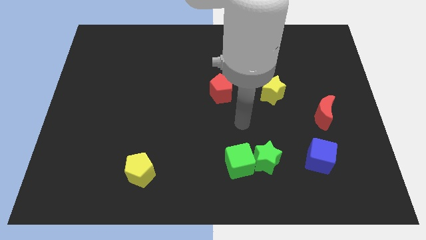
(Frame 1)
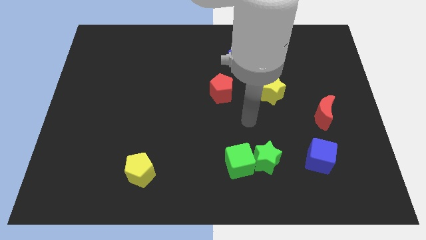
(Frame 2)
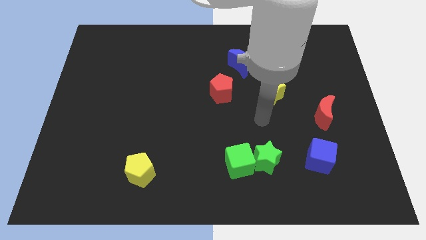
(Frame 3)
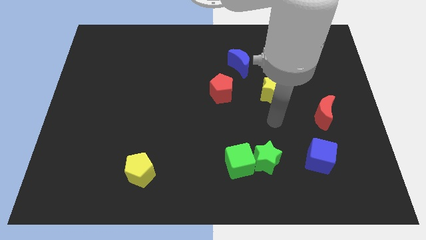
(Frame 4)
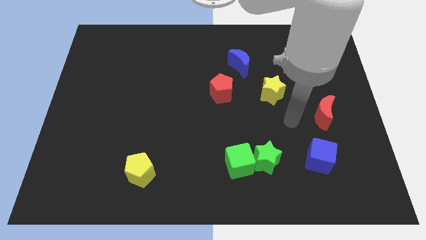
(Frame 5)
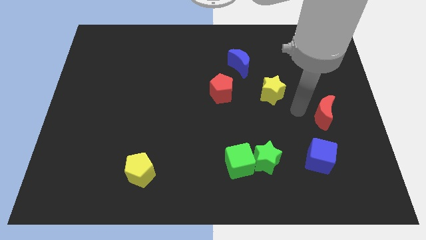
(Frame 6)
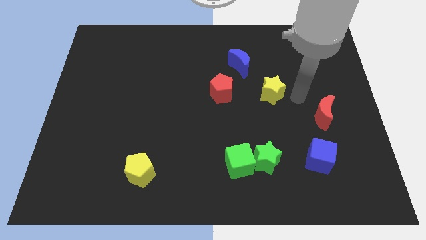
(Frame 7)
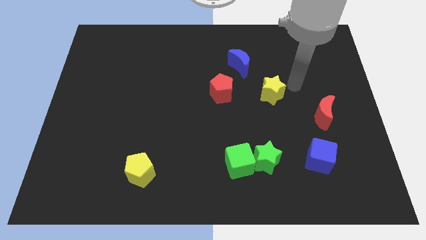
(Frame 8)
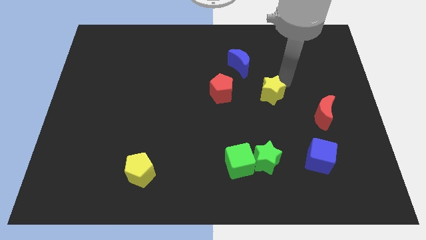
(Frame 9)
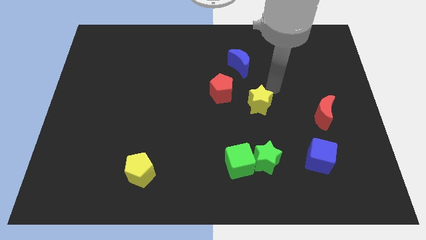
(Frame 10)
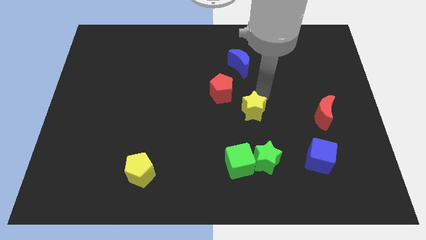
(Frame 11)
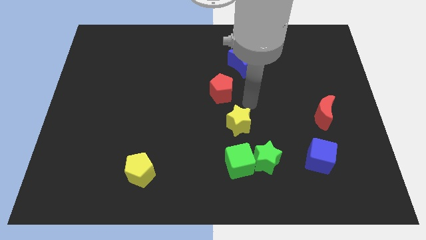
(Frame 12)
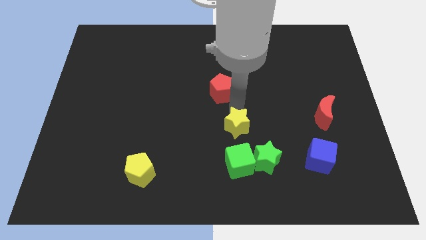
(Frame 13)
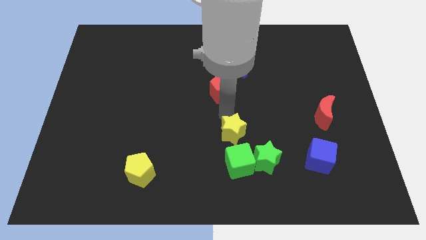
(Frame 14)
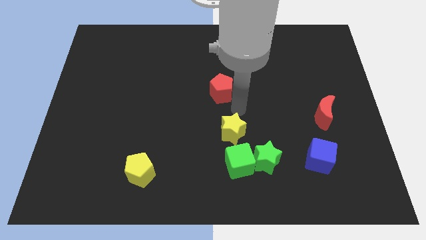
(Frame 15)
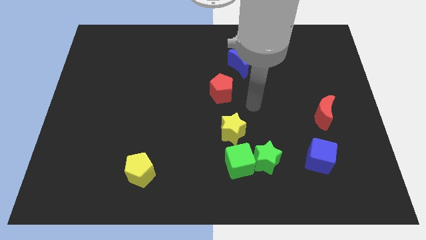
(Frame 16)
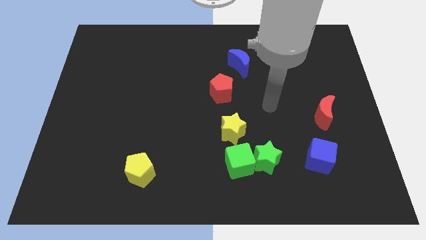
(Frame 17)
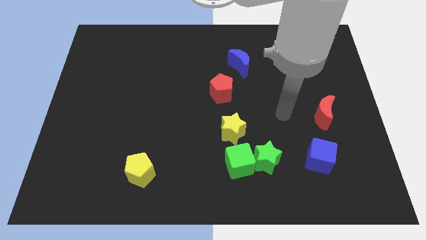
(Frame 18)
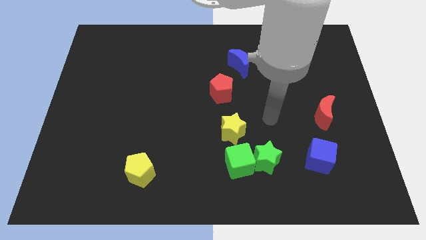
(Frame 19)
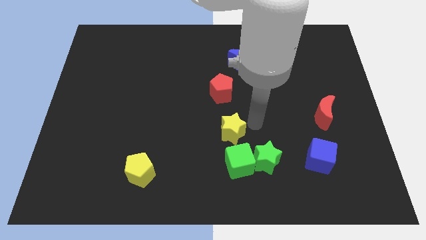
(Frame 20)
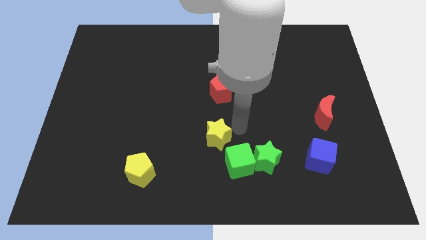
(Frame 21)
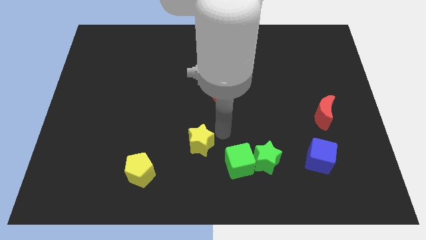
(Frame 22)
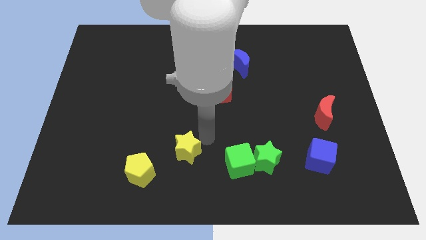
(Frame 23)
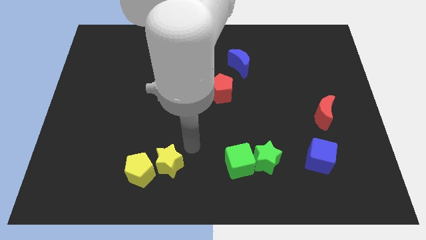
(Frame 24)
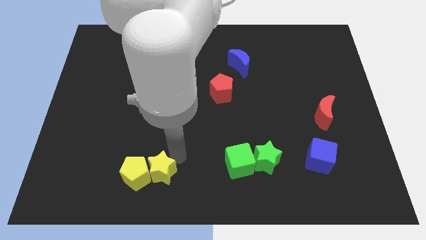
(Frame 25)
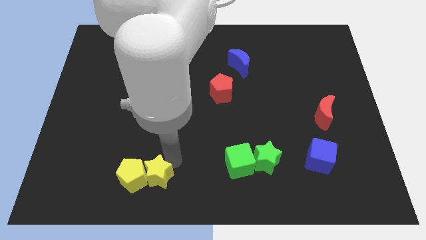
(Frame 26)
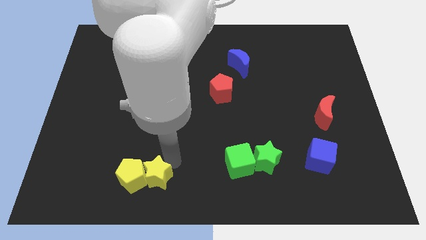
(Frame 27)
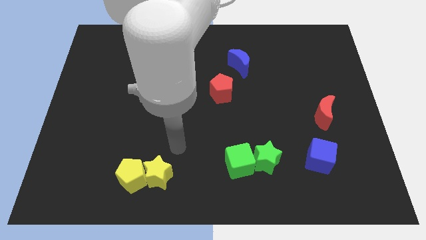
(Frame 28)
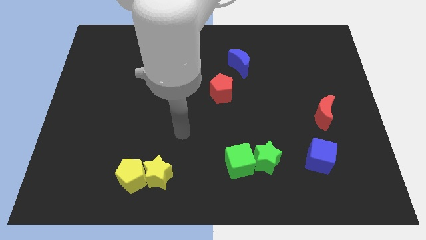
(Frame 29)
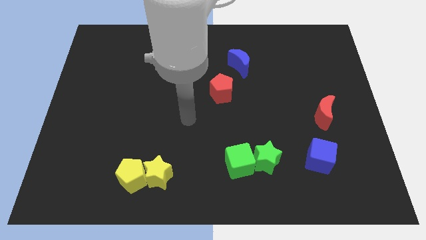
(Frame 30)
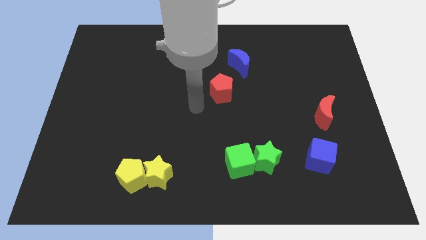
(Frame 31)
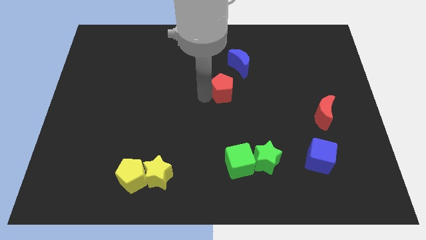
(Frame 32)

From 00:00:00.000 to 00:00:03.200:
push yellow star close to yellow pentagon

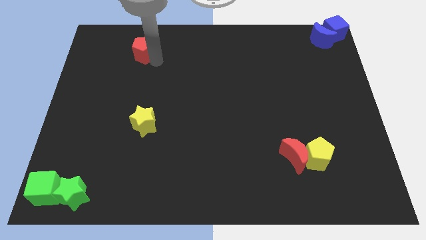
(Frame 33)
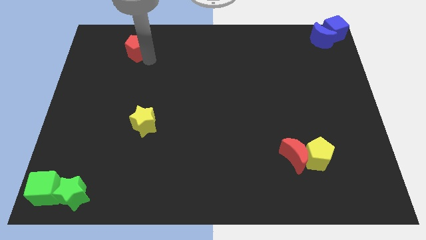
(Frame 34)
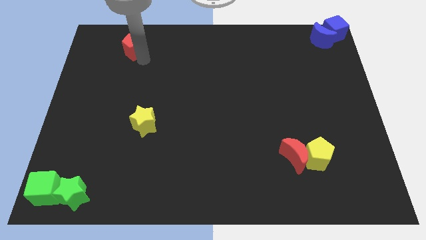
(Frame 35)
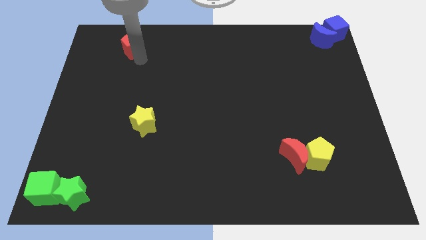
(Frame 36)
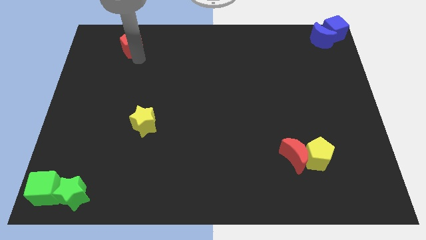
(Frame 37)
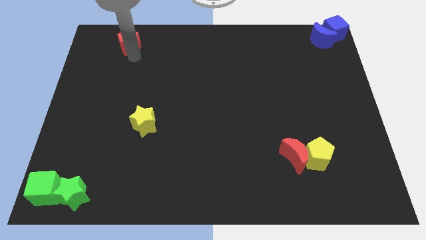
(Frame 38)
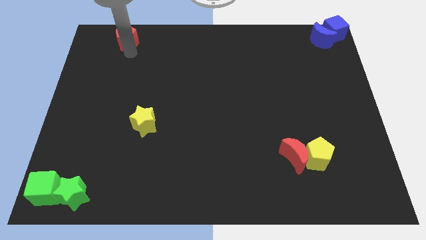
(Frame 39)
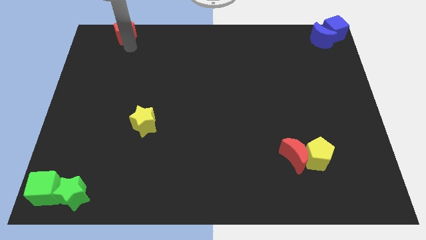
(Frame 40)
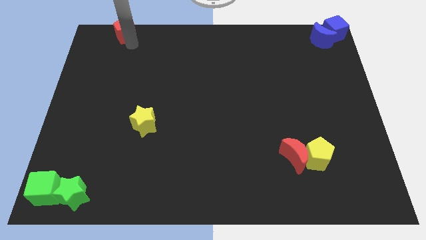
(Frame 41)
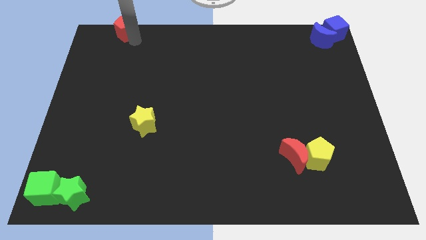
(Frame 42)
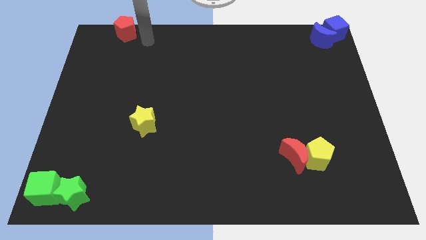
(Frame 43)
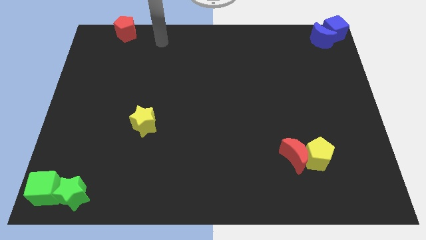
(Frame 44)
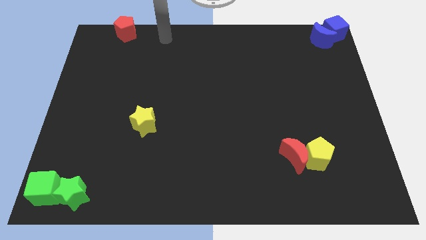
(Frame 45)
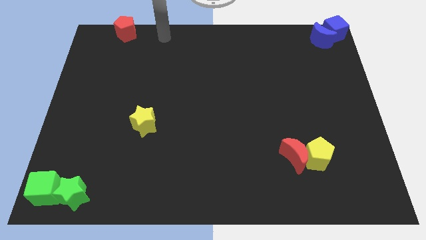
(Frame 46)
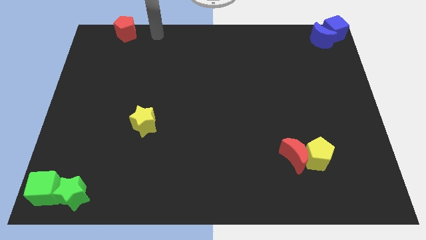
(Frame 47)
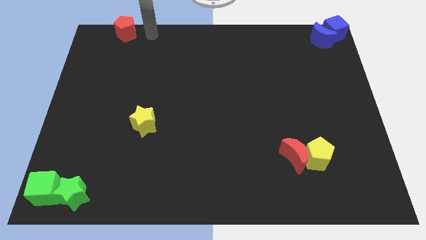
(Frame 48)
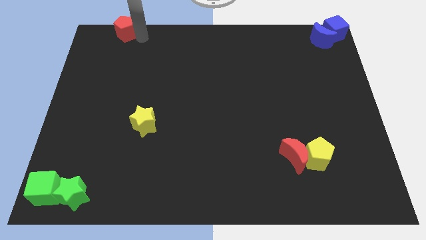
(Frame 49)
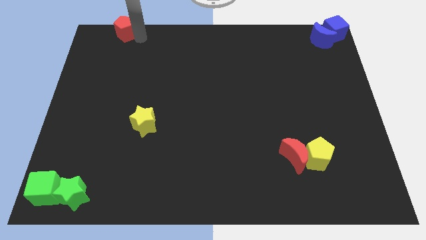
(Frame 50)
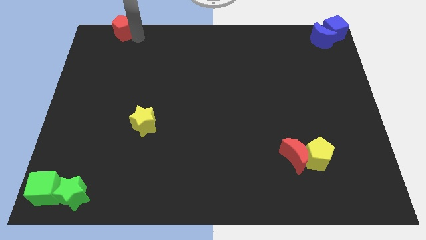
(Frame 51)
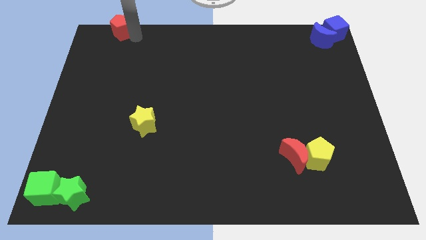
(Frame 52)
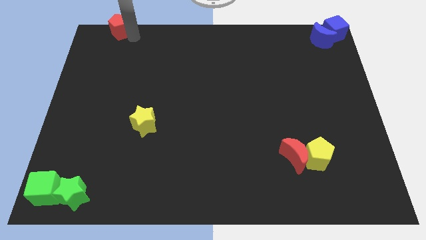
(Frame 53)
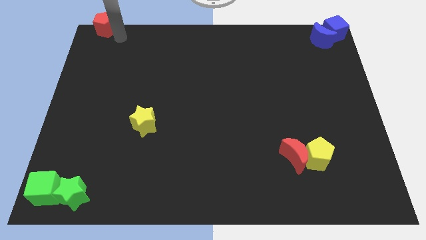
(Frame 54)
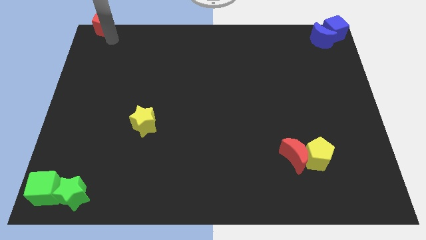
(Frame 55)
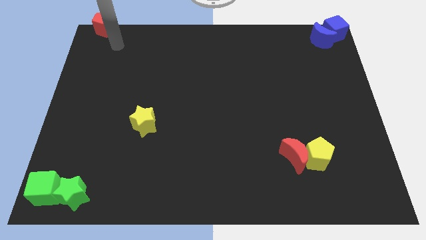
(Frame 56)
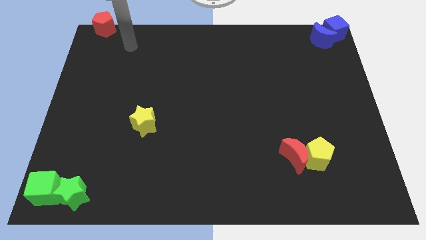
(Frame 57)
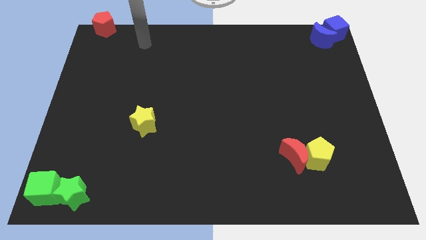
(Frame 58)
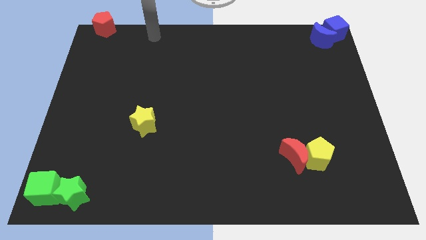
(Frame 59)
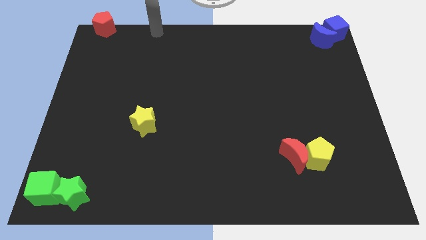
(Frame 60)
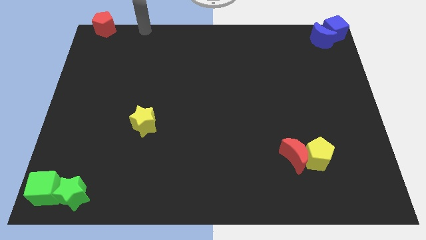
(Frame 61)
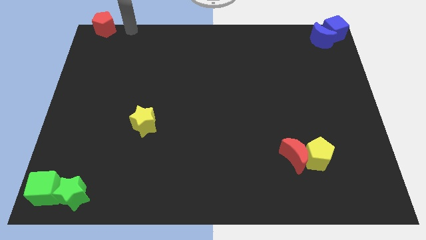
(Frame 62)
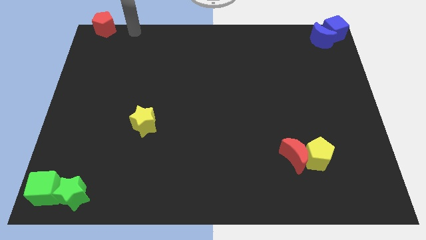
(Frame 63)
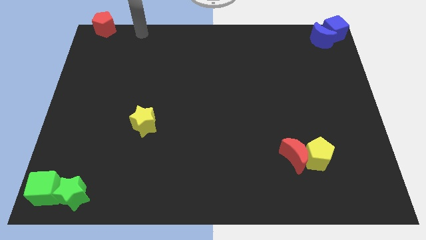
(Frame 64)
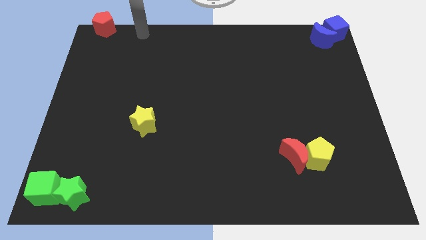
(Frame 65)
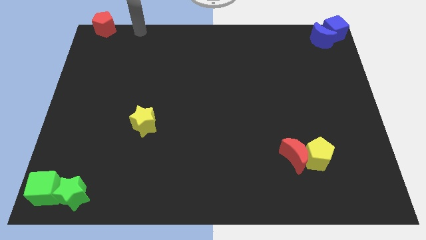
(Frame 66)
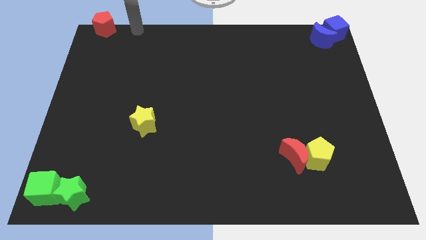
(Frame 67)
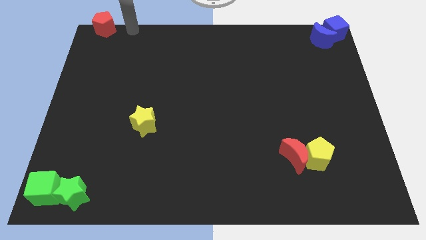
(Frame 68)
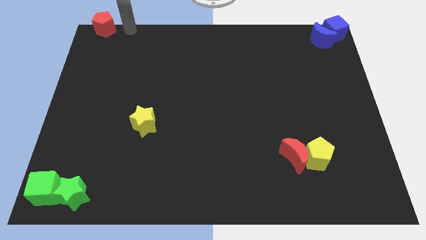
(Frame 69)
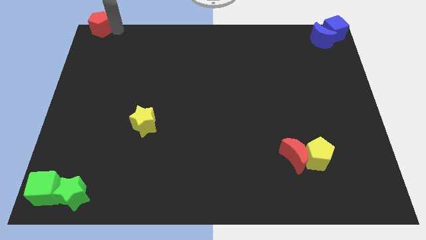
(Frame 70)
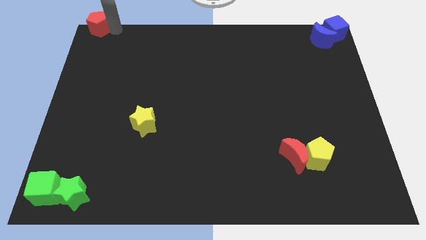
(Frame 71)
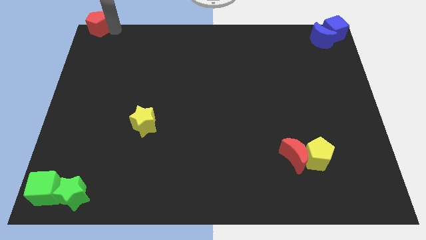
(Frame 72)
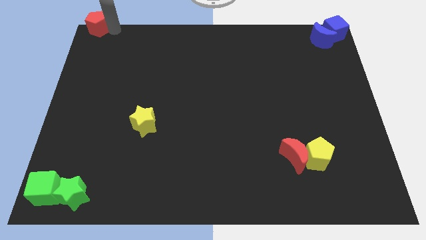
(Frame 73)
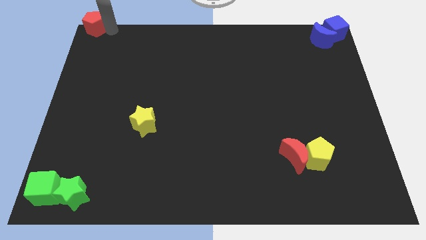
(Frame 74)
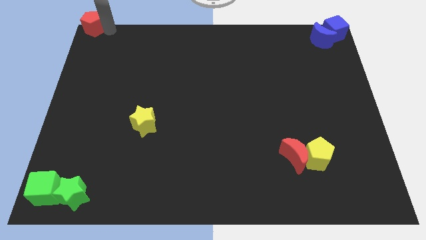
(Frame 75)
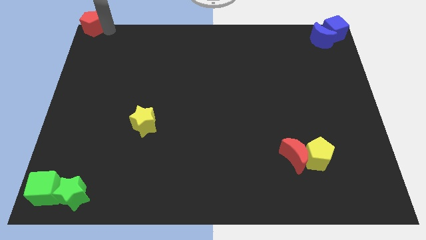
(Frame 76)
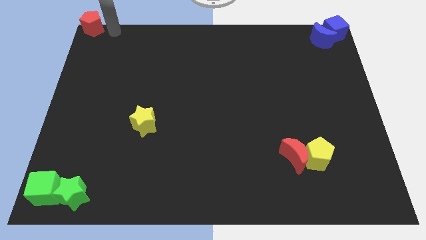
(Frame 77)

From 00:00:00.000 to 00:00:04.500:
place the red pentagon at the top left corner

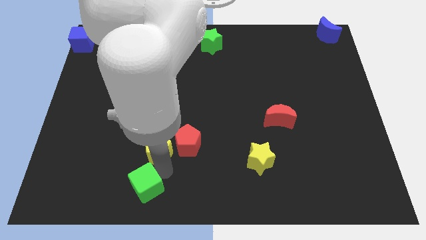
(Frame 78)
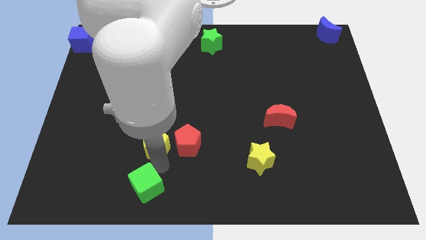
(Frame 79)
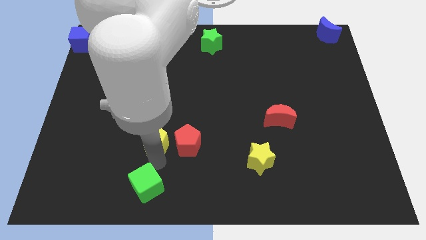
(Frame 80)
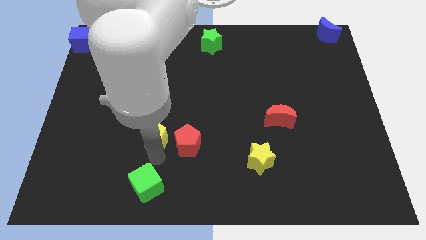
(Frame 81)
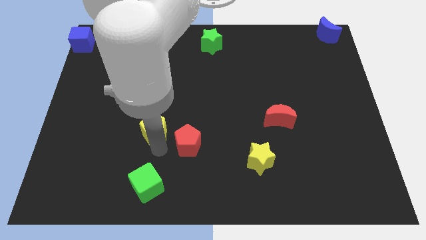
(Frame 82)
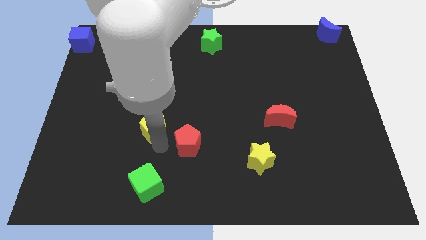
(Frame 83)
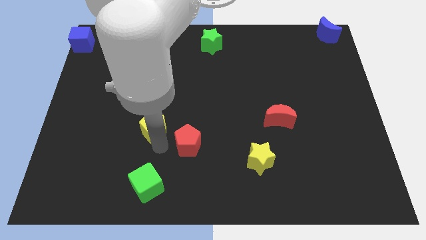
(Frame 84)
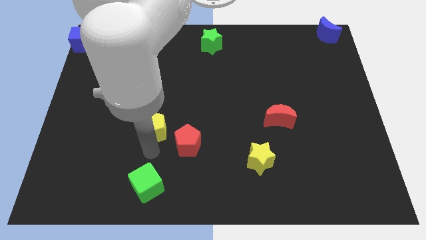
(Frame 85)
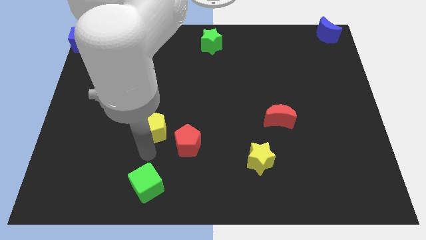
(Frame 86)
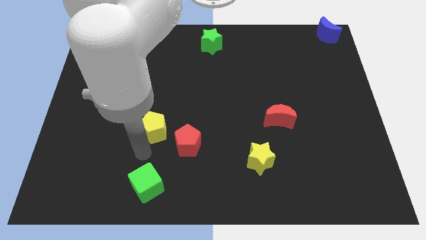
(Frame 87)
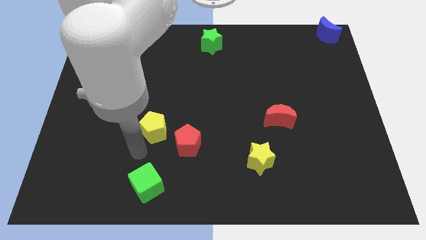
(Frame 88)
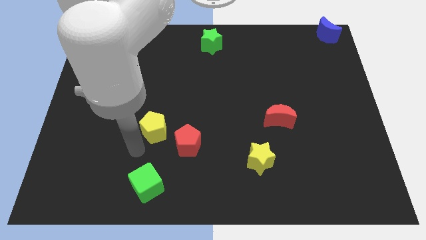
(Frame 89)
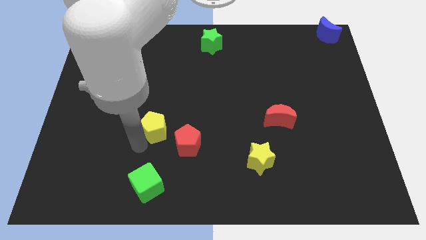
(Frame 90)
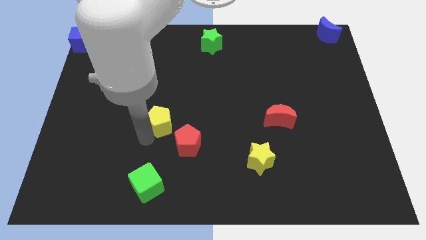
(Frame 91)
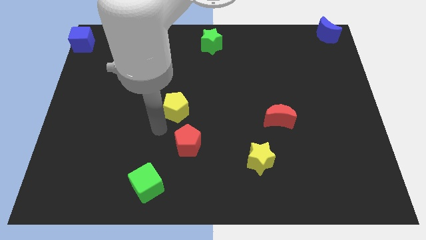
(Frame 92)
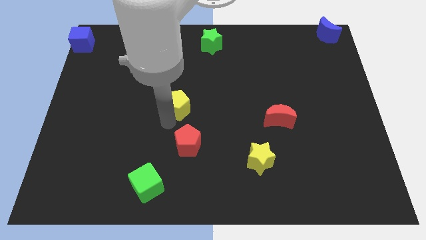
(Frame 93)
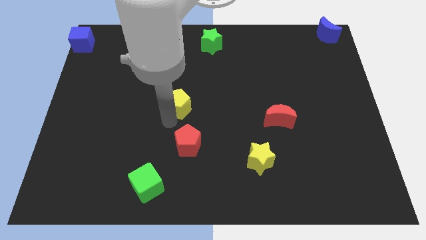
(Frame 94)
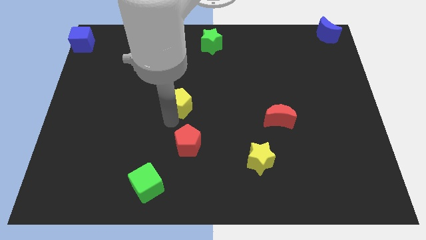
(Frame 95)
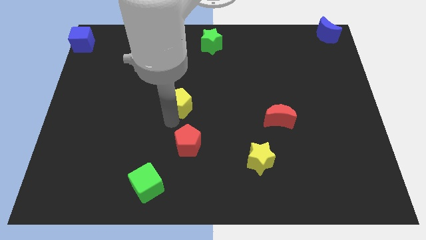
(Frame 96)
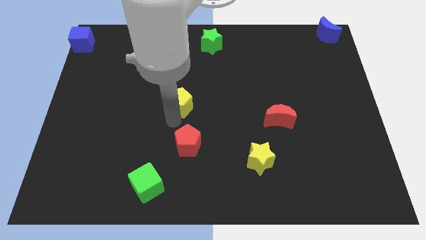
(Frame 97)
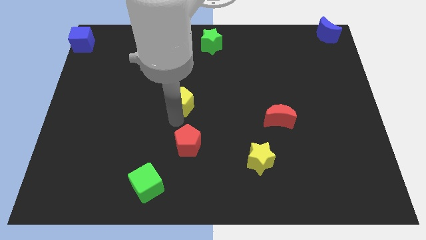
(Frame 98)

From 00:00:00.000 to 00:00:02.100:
separate yellow pentagon from the green cube
